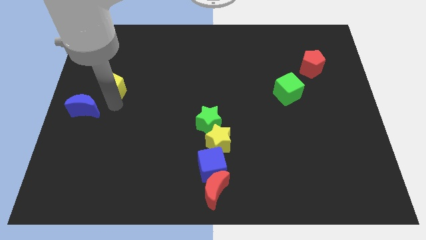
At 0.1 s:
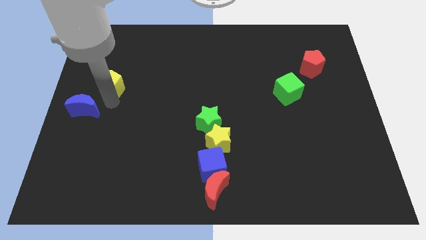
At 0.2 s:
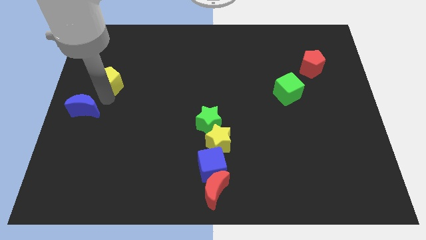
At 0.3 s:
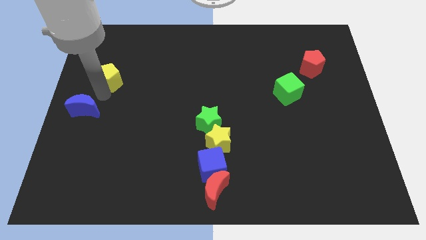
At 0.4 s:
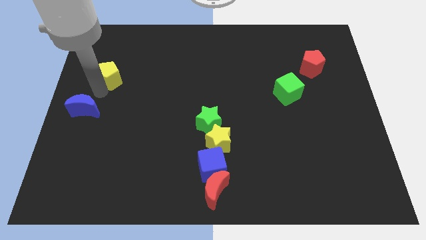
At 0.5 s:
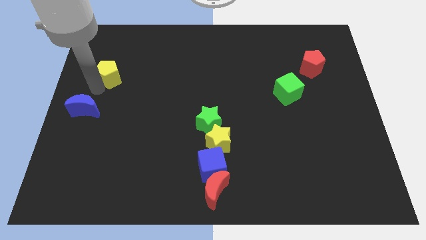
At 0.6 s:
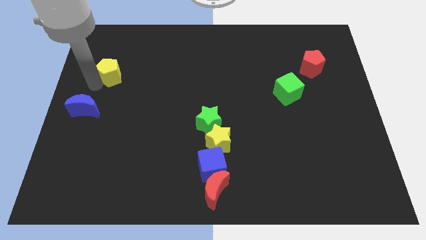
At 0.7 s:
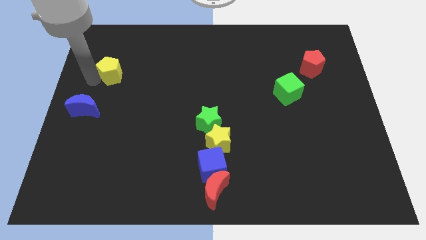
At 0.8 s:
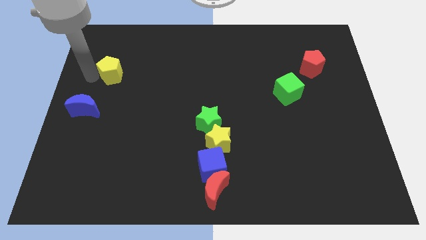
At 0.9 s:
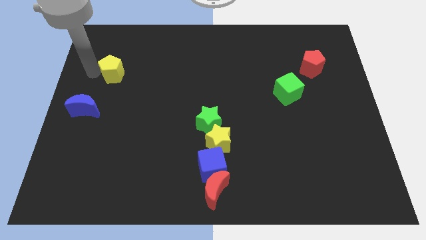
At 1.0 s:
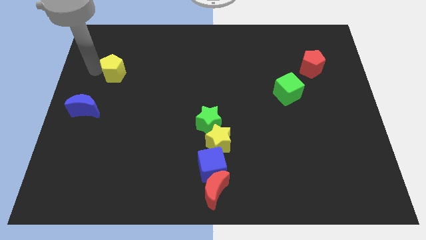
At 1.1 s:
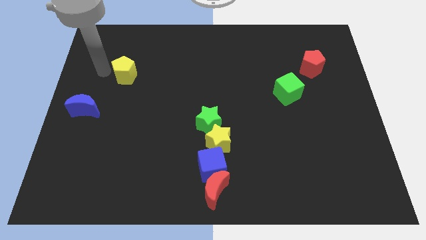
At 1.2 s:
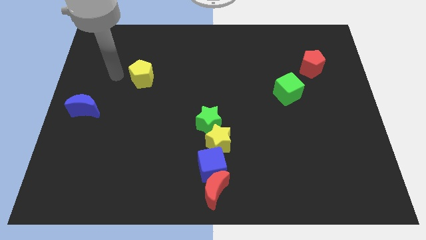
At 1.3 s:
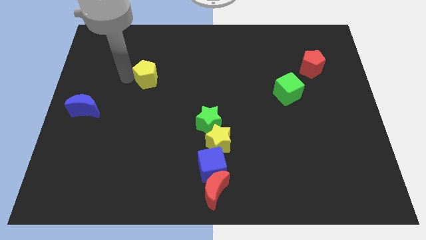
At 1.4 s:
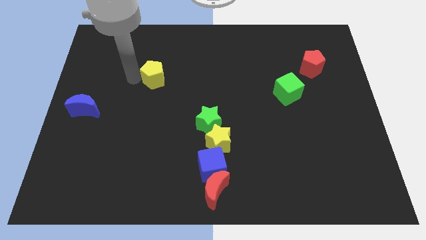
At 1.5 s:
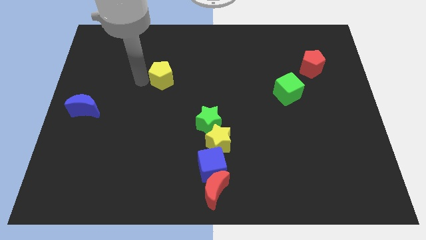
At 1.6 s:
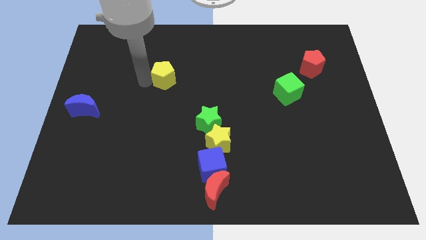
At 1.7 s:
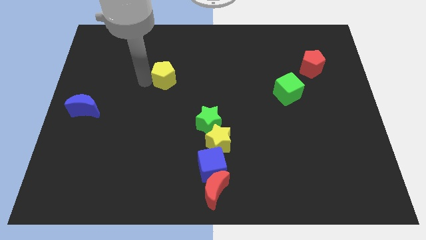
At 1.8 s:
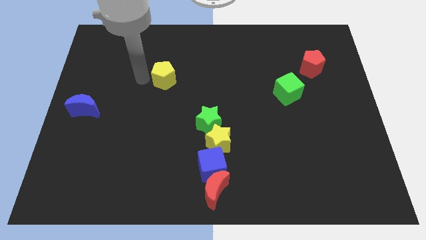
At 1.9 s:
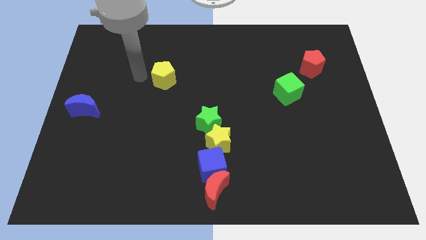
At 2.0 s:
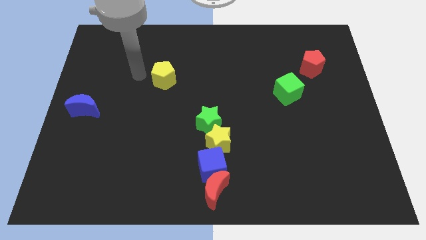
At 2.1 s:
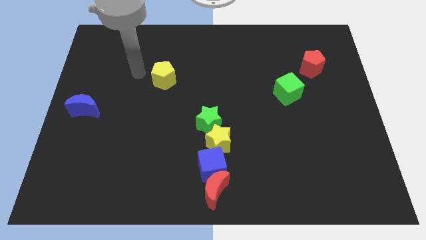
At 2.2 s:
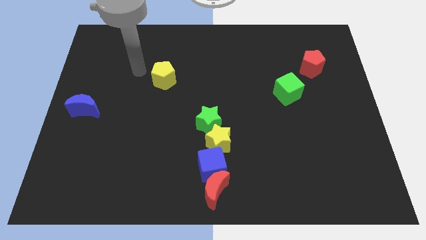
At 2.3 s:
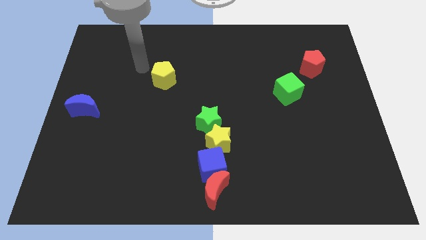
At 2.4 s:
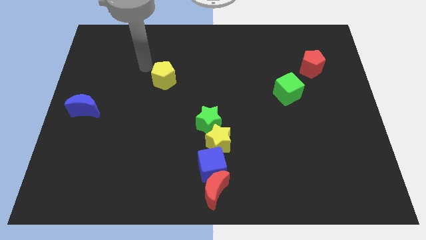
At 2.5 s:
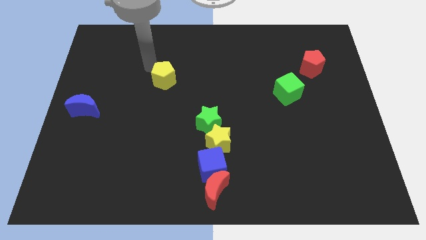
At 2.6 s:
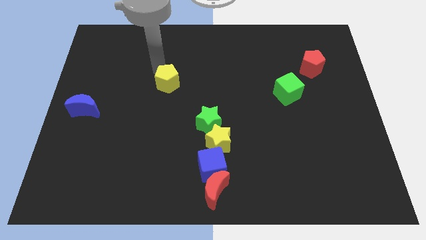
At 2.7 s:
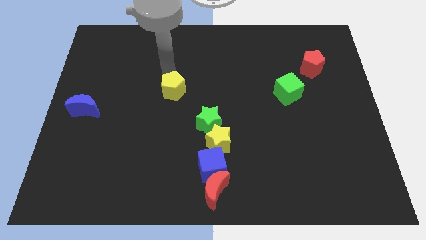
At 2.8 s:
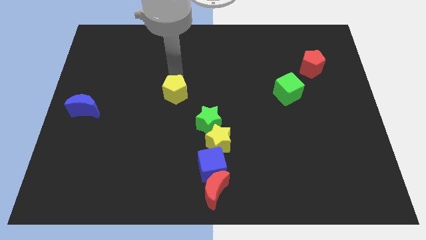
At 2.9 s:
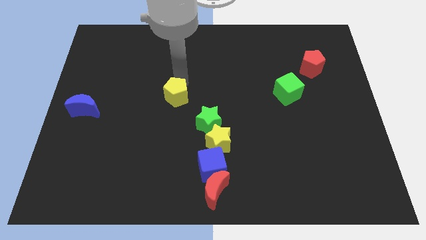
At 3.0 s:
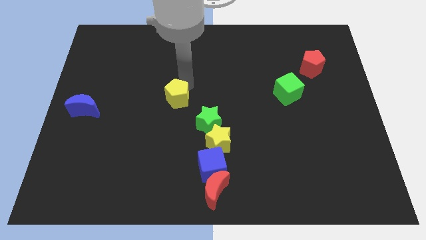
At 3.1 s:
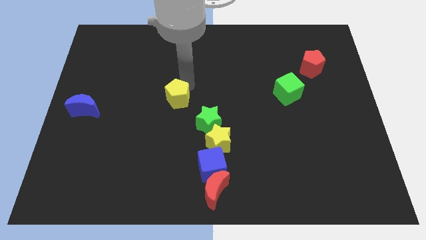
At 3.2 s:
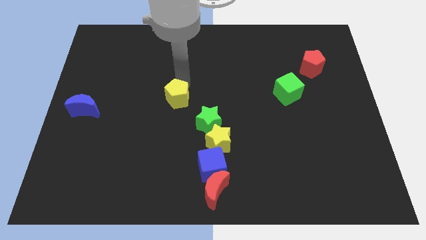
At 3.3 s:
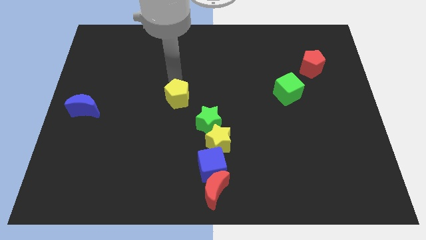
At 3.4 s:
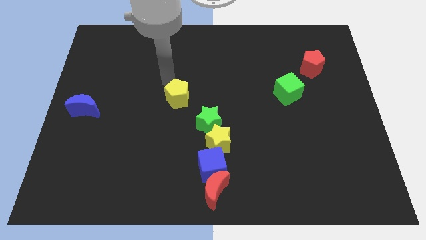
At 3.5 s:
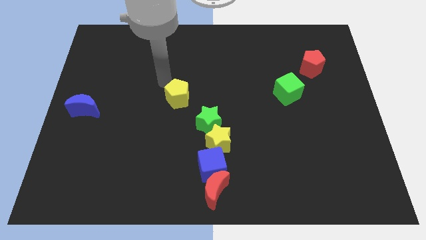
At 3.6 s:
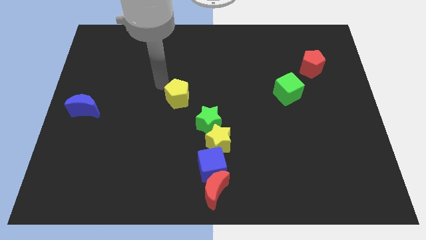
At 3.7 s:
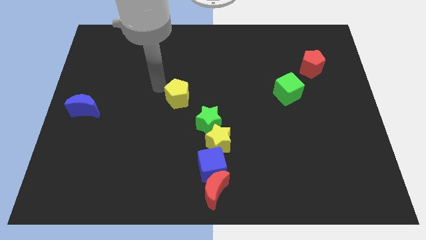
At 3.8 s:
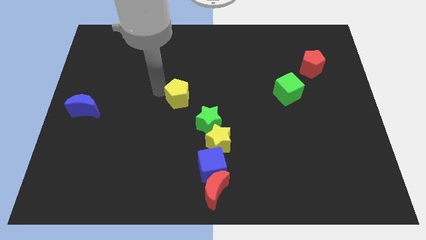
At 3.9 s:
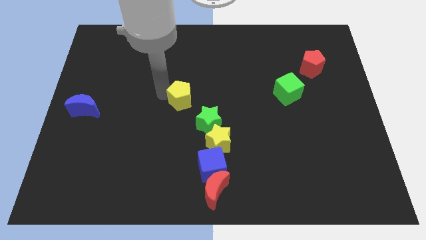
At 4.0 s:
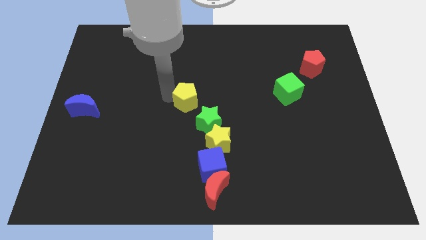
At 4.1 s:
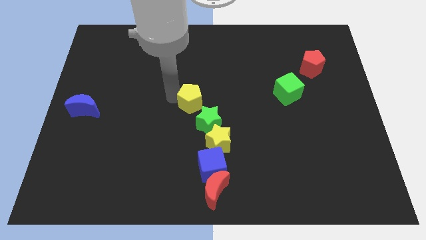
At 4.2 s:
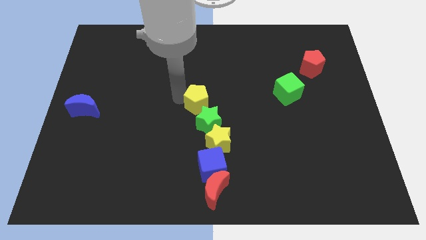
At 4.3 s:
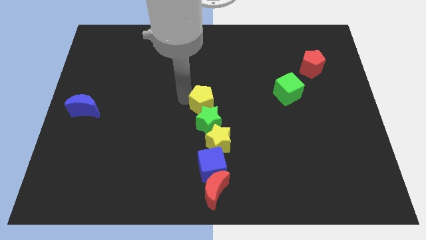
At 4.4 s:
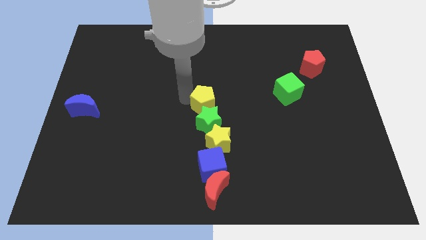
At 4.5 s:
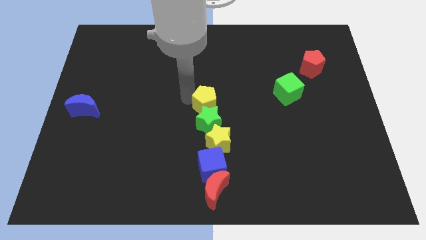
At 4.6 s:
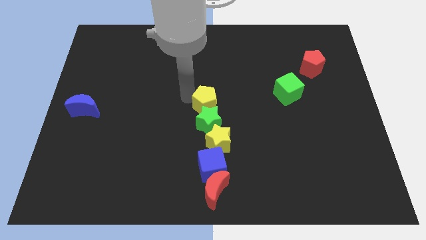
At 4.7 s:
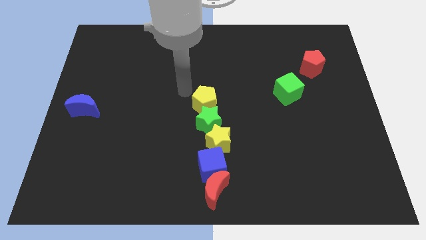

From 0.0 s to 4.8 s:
move the yellow pentagon to the top of the green star

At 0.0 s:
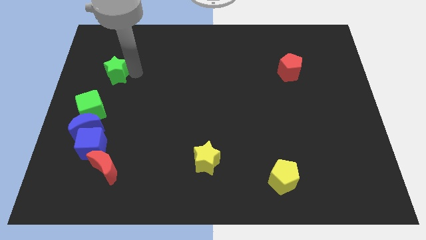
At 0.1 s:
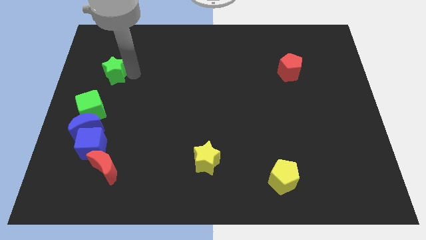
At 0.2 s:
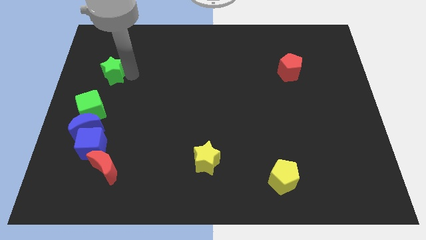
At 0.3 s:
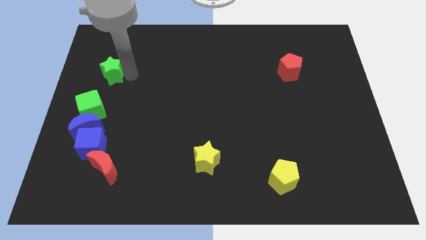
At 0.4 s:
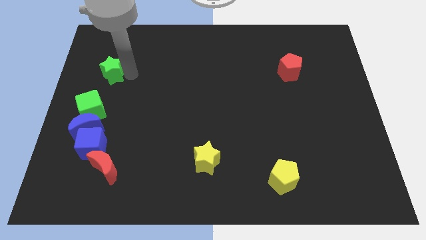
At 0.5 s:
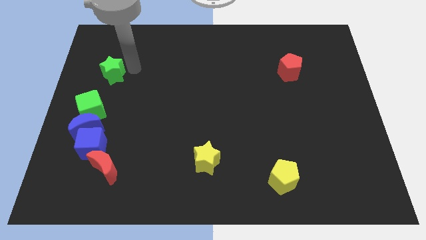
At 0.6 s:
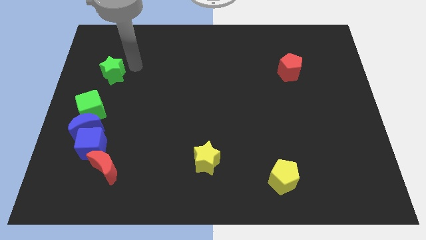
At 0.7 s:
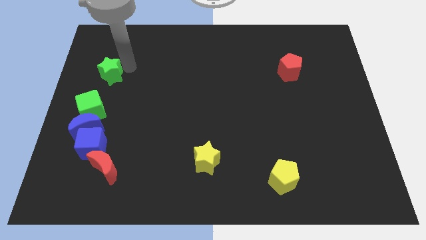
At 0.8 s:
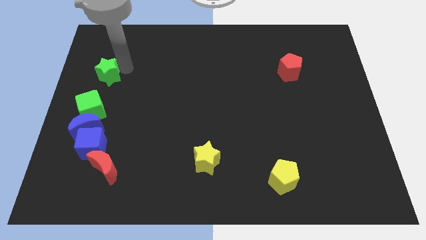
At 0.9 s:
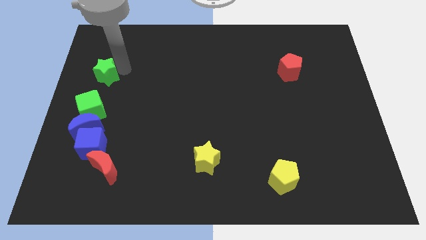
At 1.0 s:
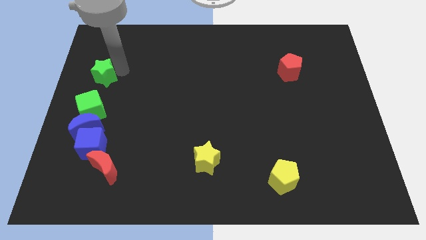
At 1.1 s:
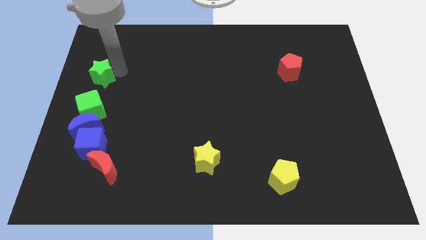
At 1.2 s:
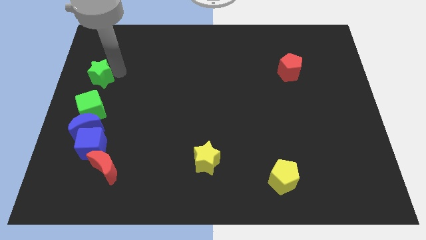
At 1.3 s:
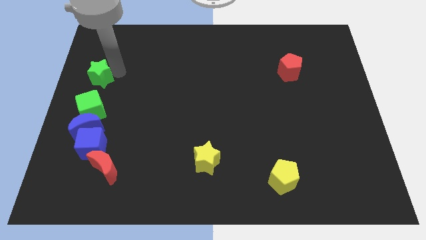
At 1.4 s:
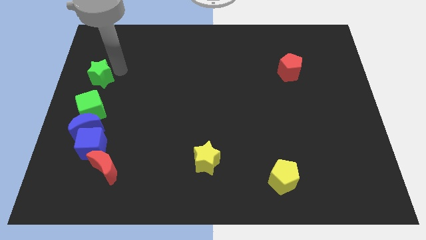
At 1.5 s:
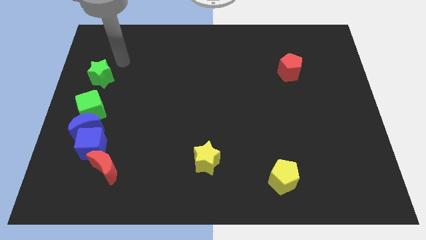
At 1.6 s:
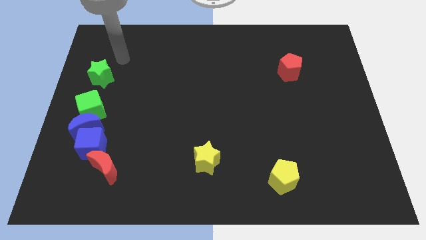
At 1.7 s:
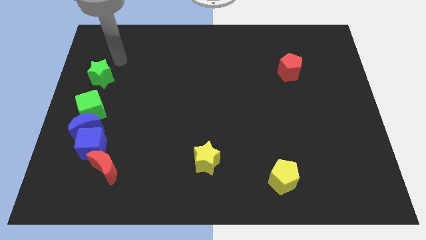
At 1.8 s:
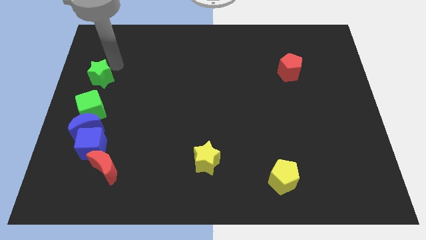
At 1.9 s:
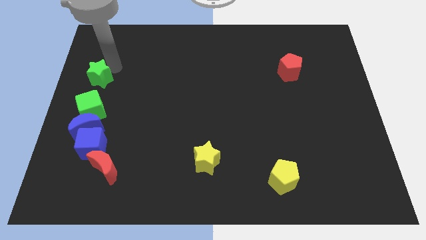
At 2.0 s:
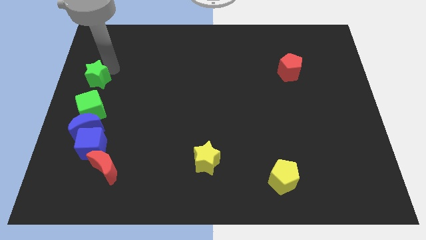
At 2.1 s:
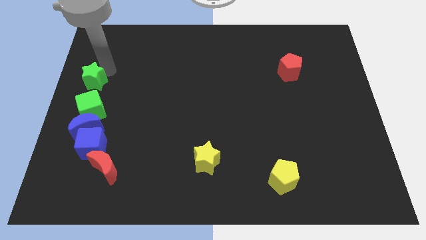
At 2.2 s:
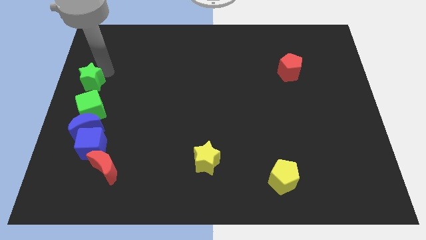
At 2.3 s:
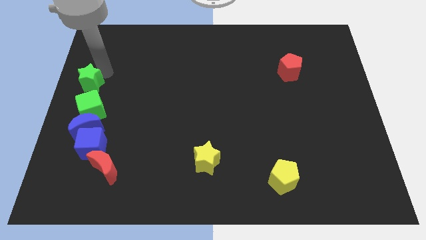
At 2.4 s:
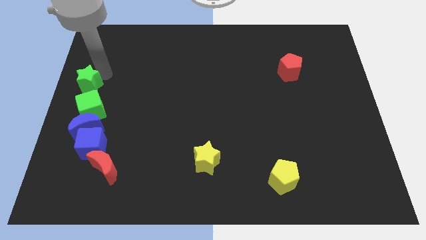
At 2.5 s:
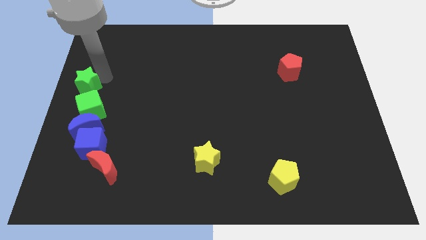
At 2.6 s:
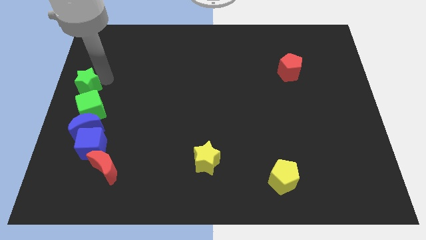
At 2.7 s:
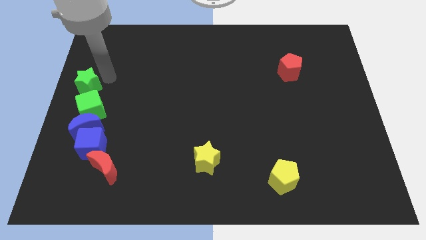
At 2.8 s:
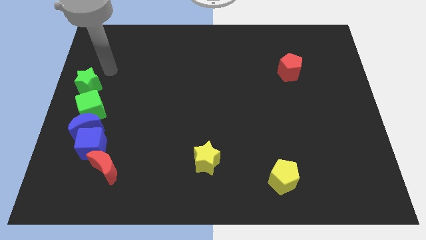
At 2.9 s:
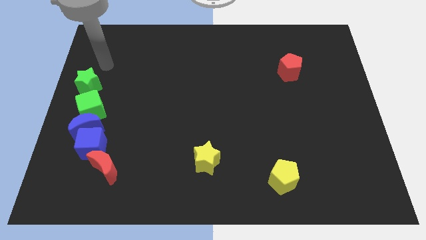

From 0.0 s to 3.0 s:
place the green star above the green cube

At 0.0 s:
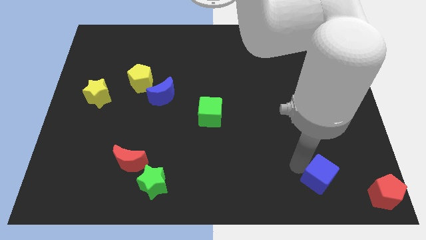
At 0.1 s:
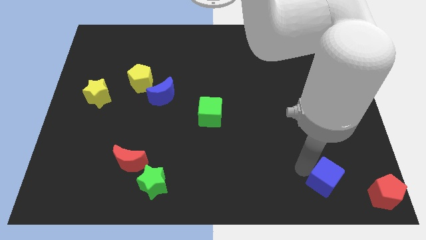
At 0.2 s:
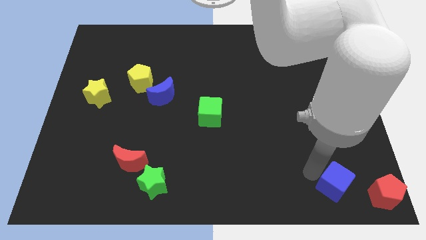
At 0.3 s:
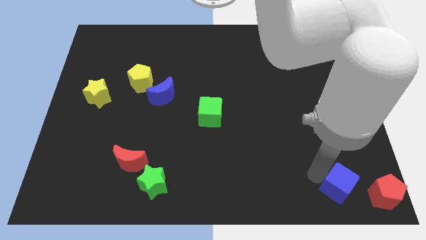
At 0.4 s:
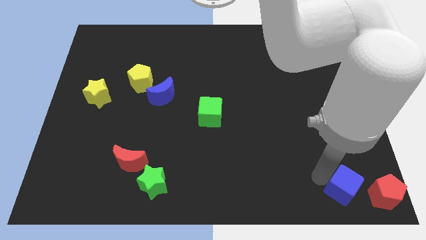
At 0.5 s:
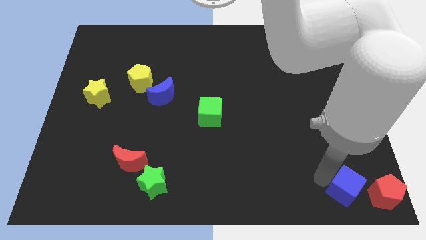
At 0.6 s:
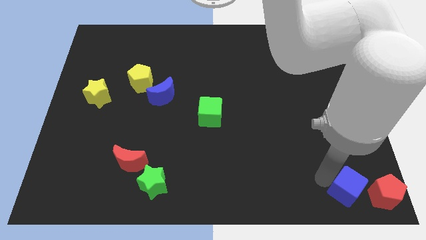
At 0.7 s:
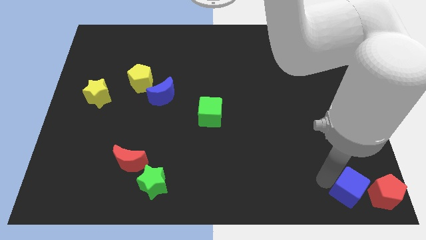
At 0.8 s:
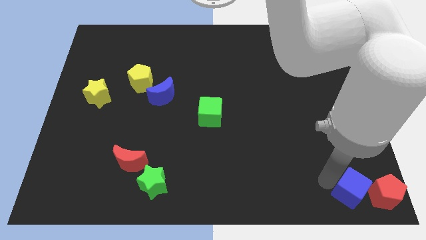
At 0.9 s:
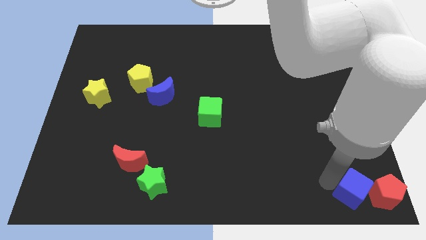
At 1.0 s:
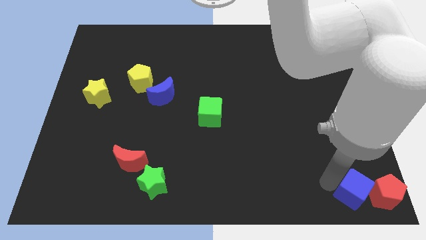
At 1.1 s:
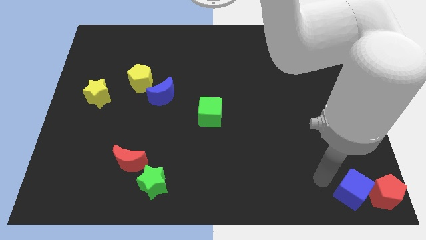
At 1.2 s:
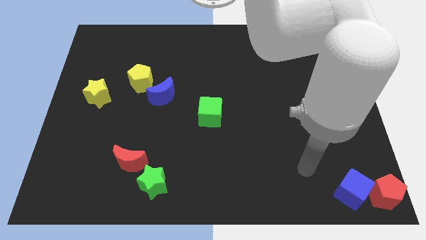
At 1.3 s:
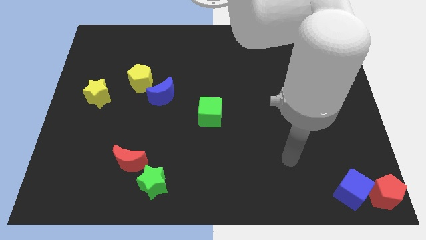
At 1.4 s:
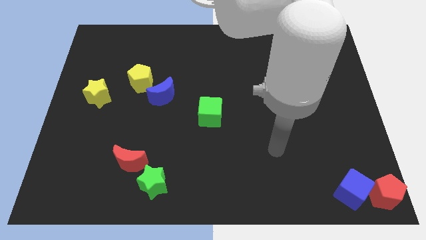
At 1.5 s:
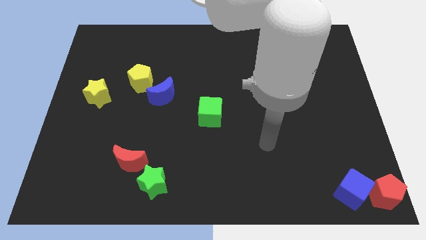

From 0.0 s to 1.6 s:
place the blue cube to the left of the red pentagon
